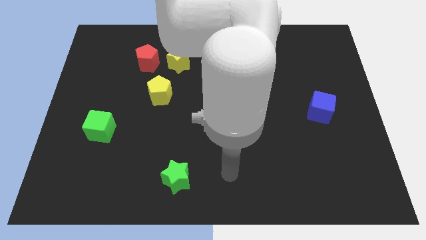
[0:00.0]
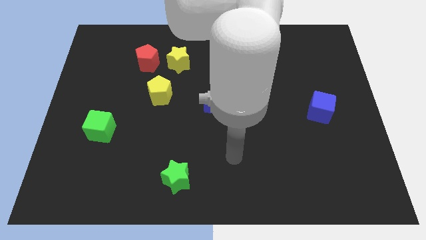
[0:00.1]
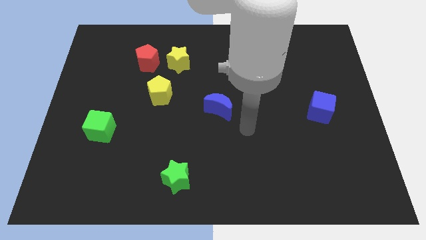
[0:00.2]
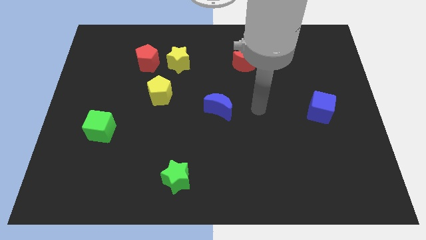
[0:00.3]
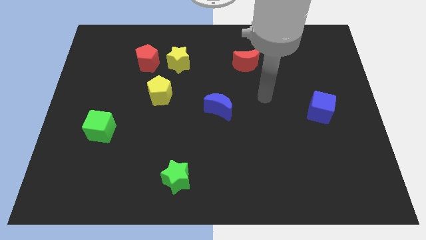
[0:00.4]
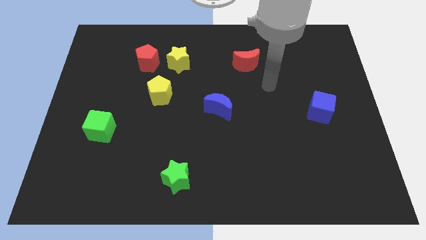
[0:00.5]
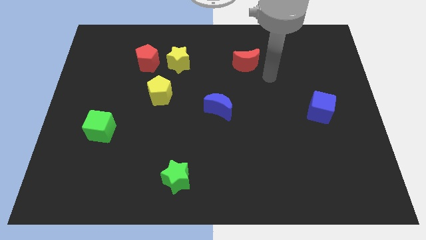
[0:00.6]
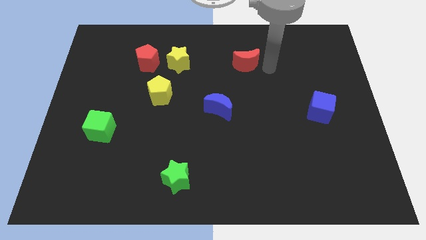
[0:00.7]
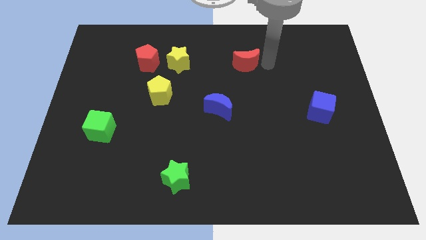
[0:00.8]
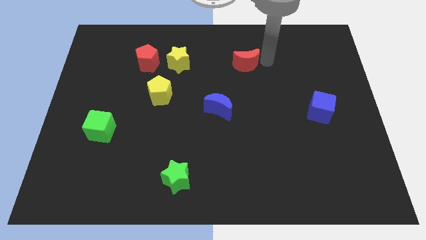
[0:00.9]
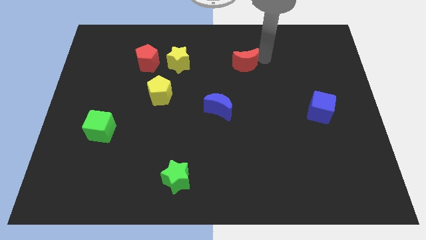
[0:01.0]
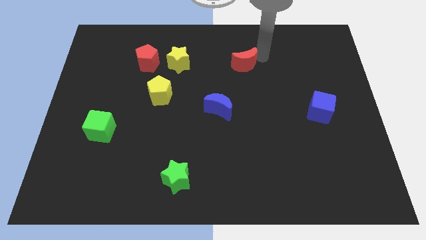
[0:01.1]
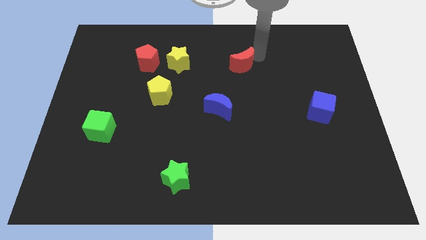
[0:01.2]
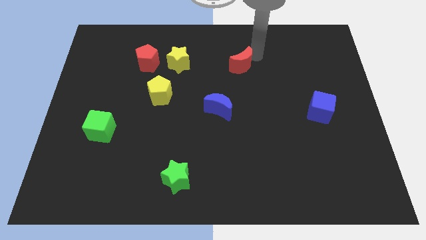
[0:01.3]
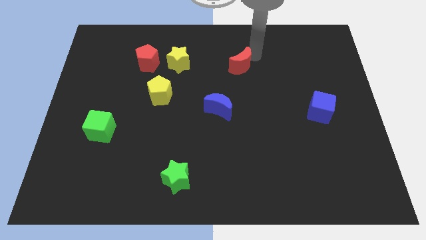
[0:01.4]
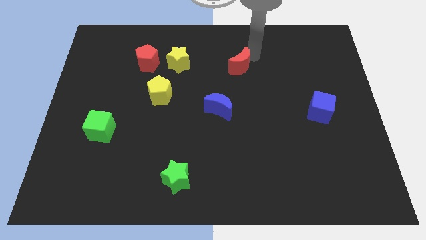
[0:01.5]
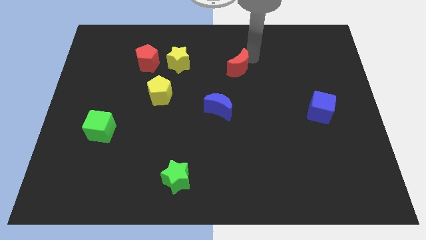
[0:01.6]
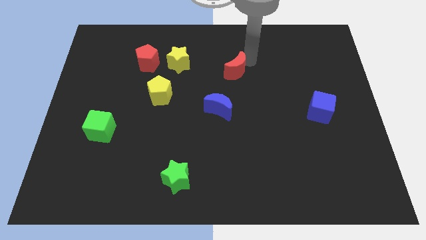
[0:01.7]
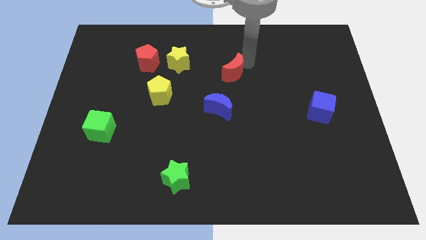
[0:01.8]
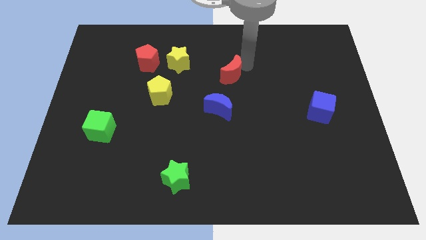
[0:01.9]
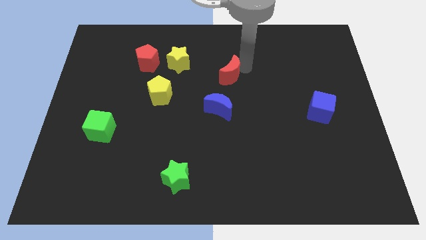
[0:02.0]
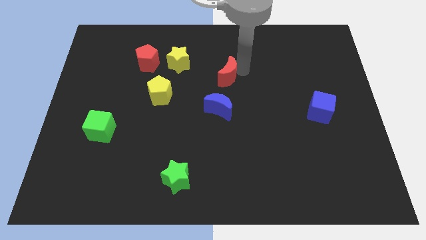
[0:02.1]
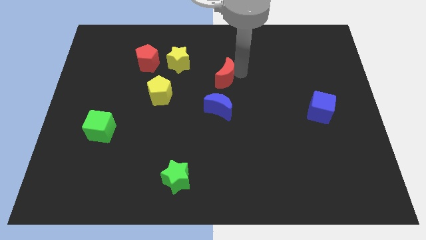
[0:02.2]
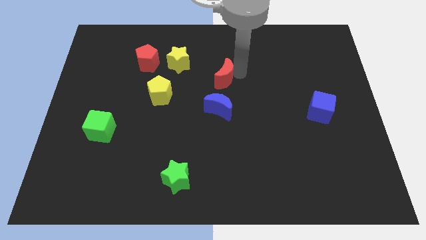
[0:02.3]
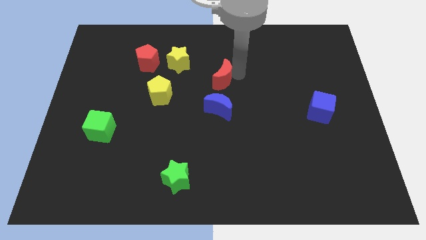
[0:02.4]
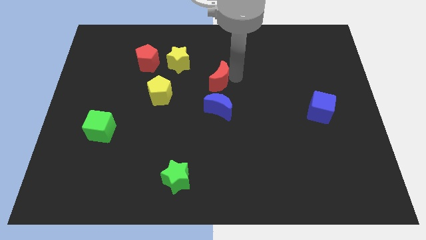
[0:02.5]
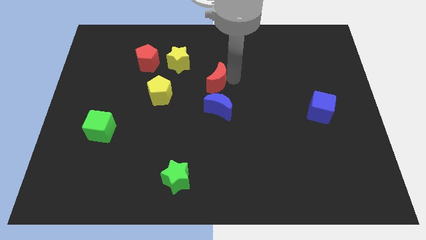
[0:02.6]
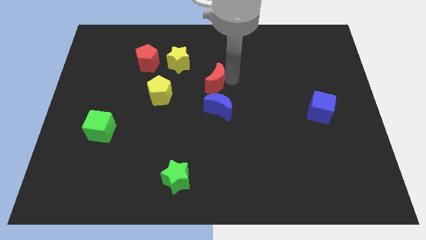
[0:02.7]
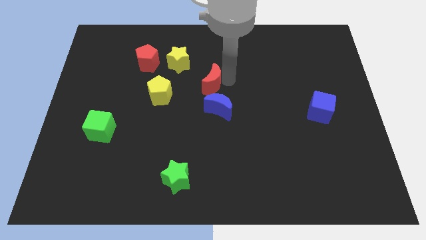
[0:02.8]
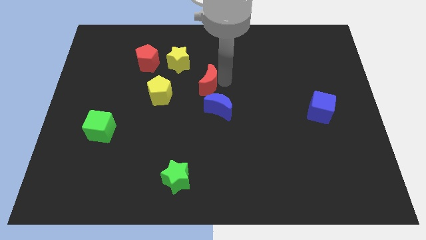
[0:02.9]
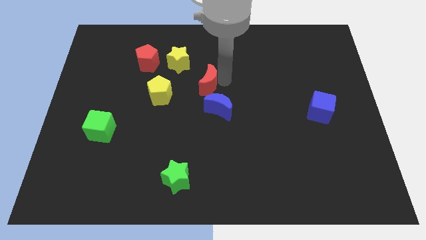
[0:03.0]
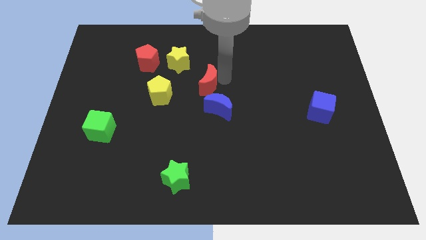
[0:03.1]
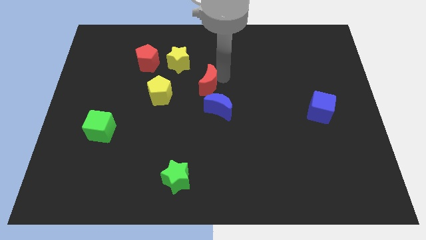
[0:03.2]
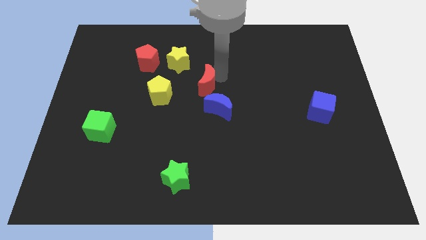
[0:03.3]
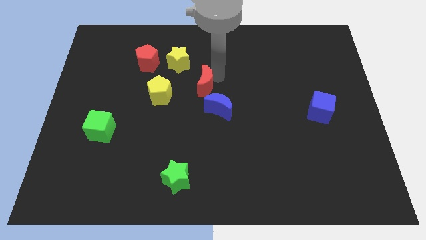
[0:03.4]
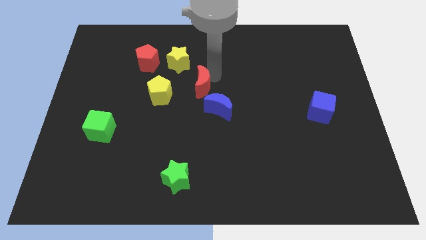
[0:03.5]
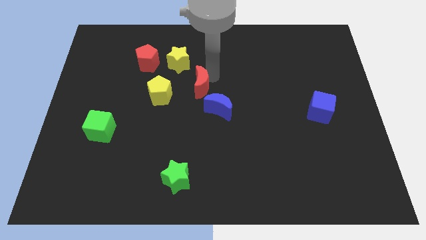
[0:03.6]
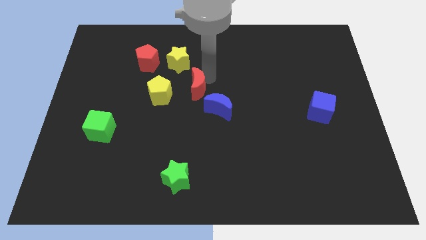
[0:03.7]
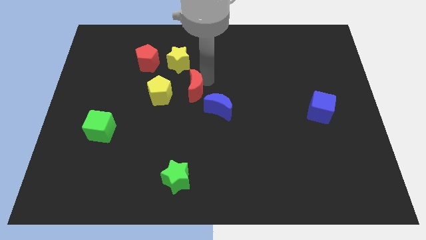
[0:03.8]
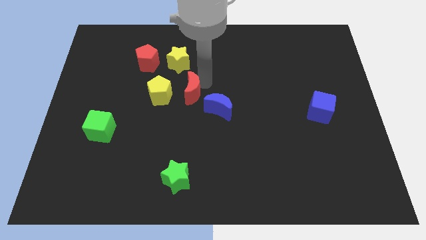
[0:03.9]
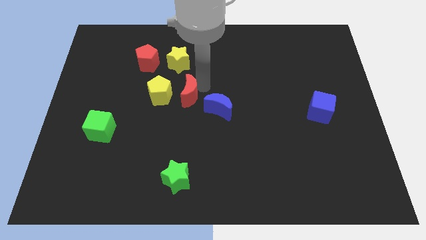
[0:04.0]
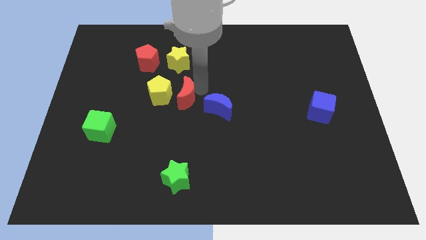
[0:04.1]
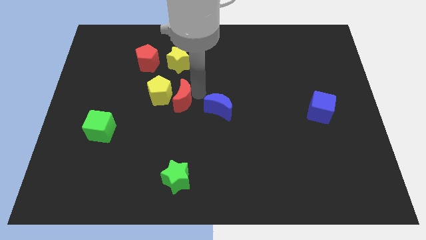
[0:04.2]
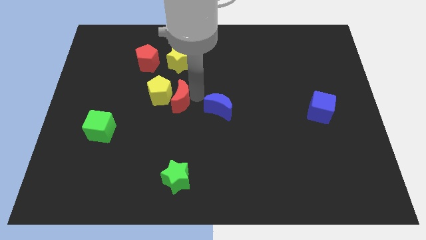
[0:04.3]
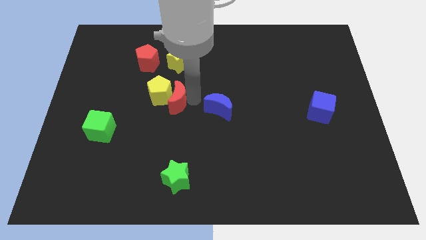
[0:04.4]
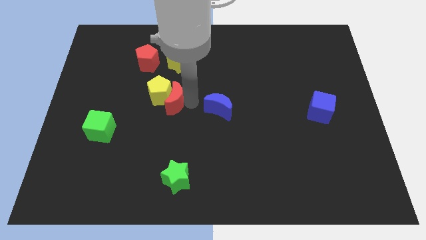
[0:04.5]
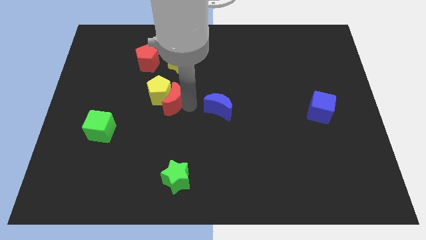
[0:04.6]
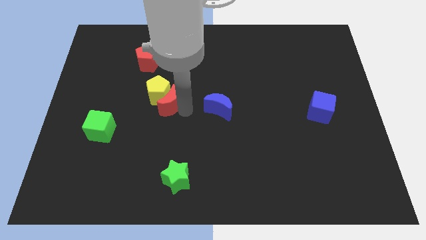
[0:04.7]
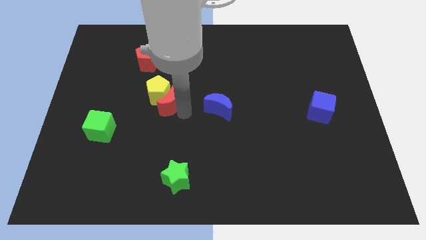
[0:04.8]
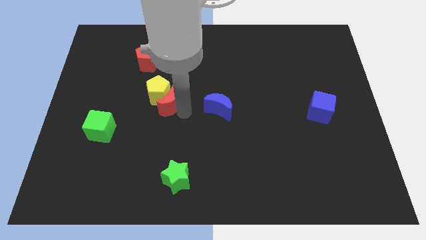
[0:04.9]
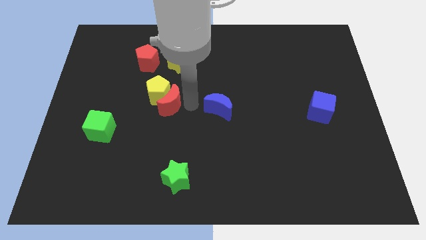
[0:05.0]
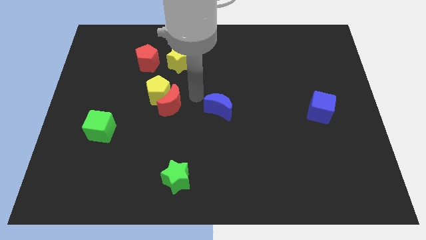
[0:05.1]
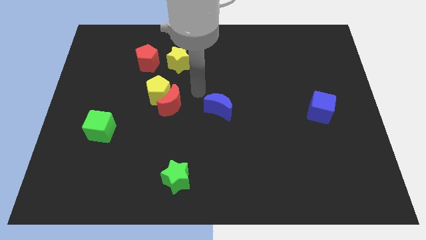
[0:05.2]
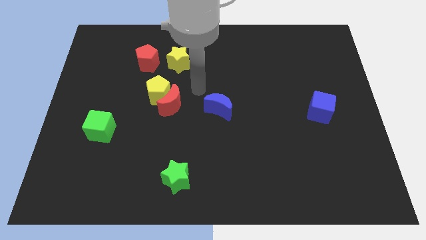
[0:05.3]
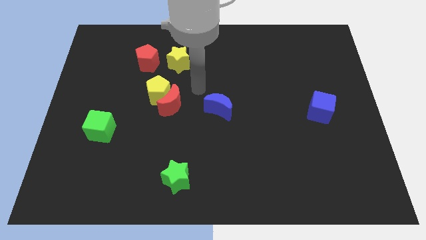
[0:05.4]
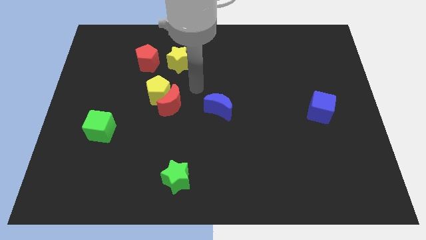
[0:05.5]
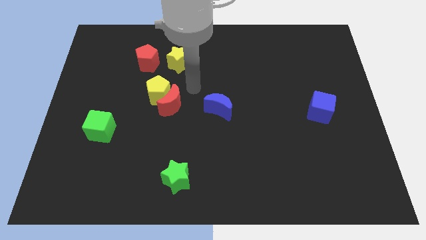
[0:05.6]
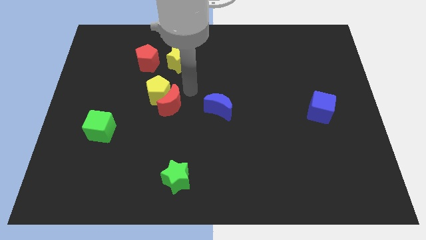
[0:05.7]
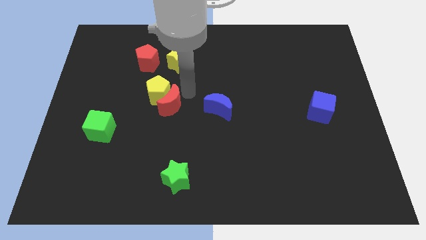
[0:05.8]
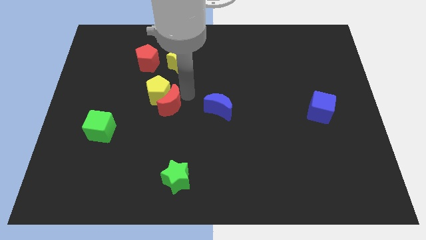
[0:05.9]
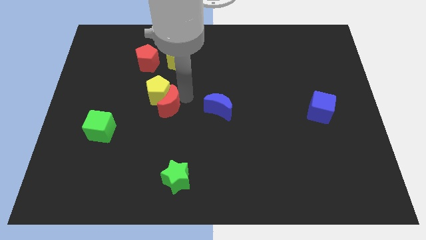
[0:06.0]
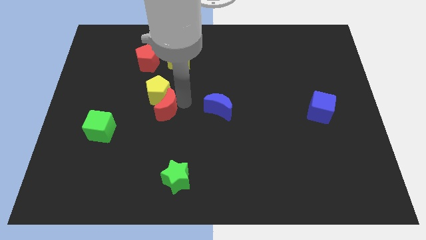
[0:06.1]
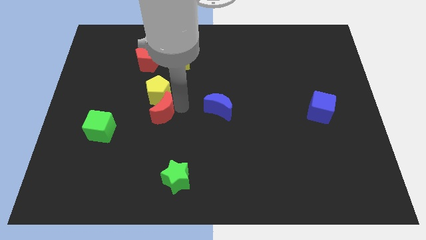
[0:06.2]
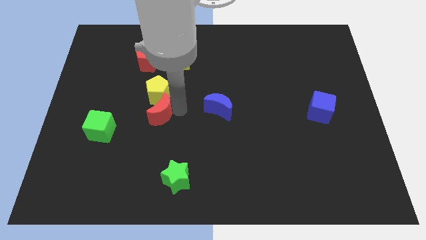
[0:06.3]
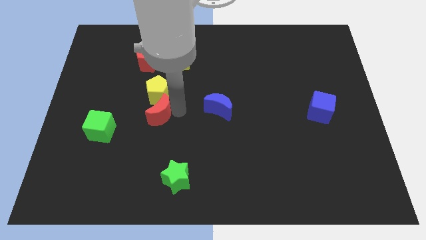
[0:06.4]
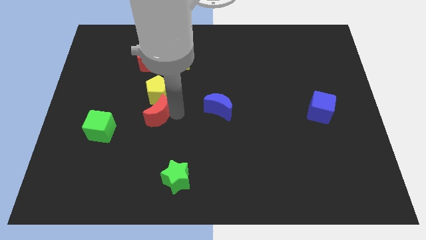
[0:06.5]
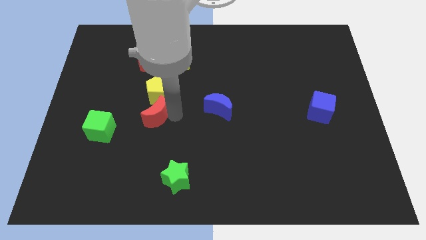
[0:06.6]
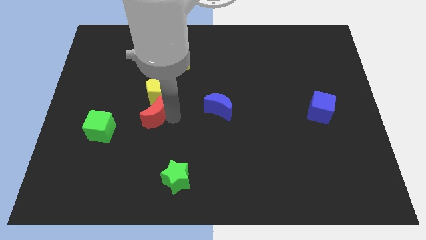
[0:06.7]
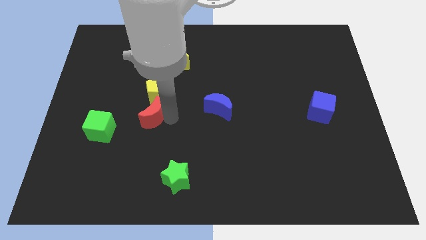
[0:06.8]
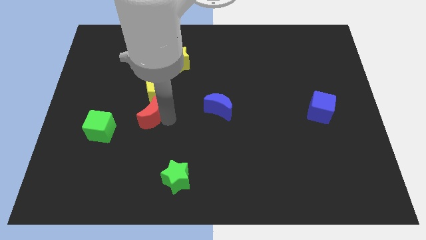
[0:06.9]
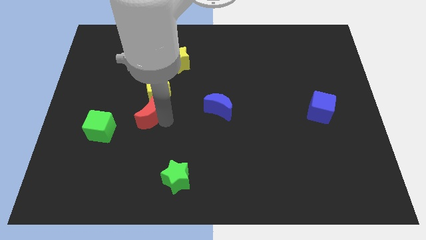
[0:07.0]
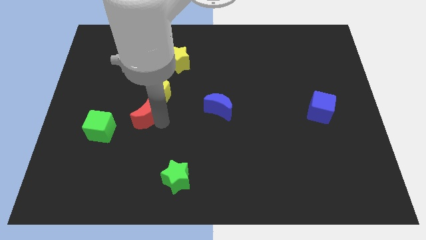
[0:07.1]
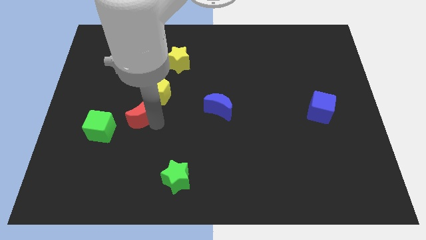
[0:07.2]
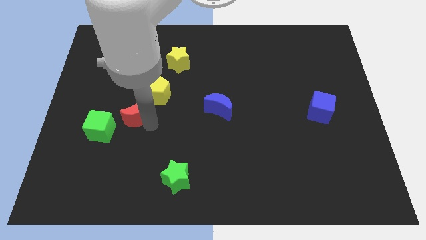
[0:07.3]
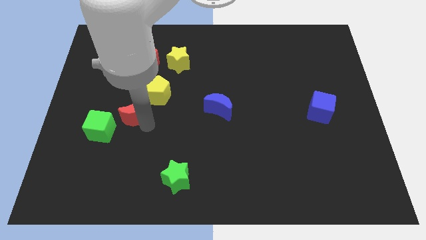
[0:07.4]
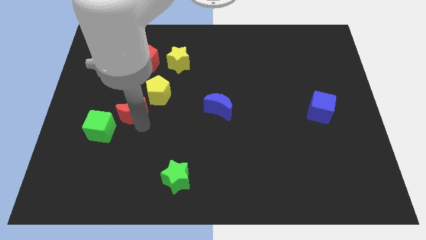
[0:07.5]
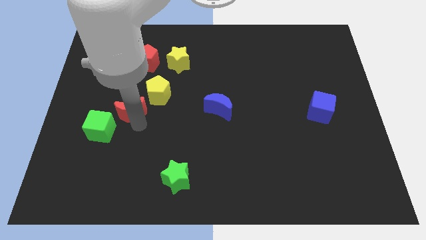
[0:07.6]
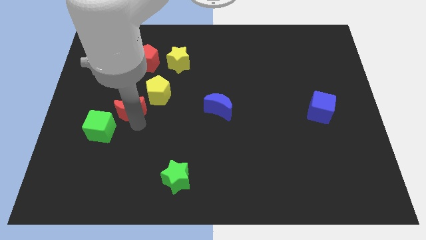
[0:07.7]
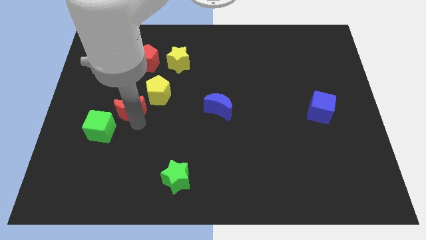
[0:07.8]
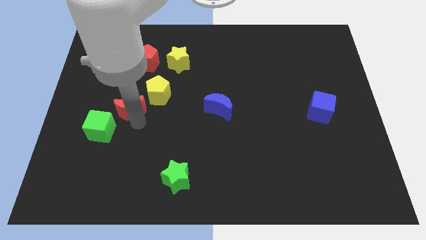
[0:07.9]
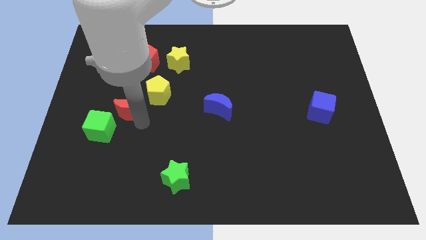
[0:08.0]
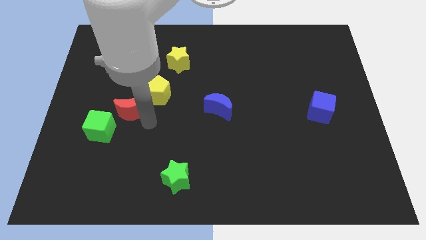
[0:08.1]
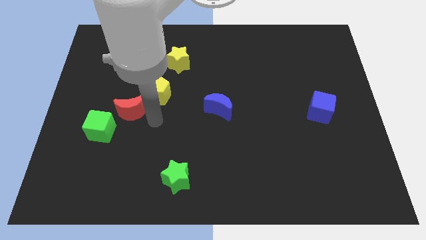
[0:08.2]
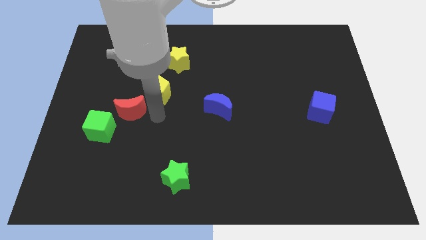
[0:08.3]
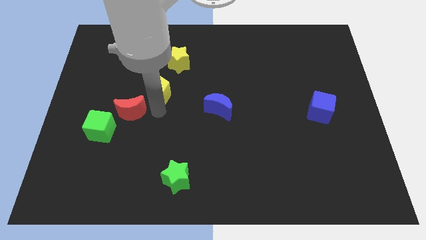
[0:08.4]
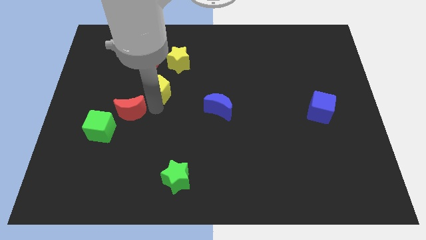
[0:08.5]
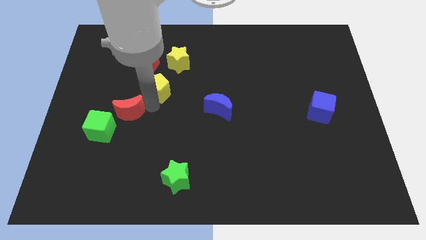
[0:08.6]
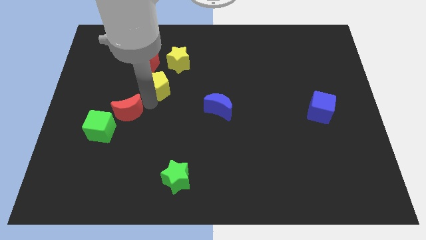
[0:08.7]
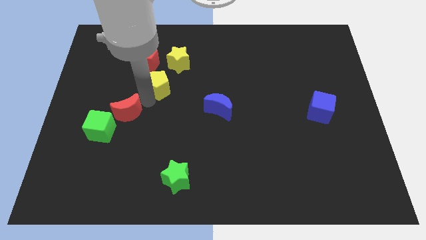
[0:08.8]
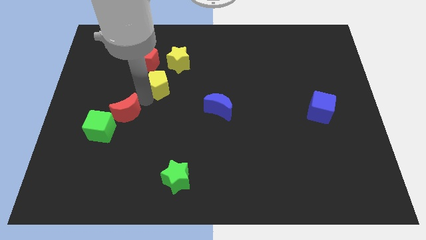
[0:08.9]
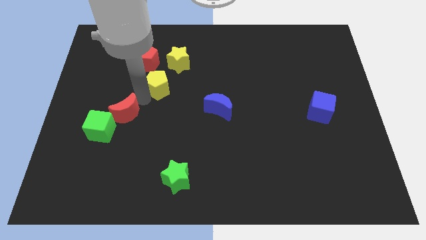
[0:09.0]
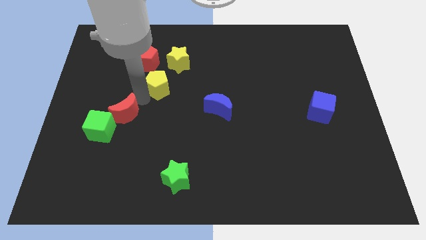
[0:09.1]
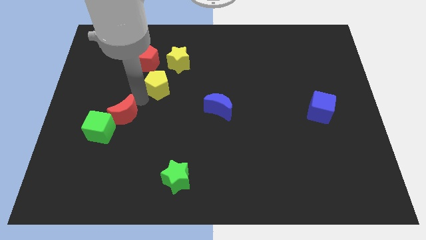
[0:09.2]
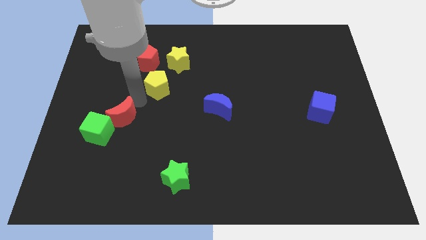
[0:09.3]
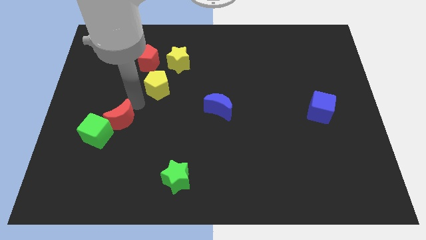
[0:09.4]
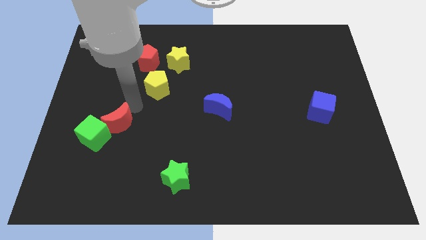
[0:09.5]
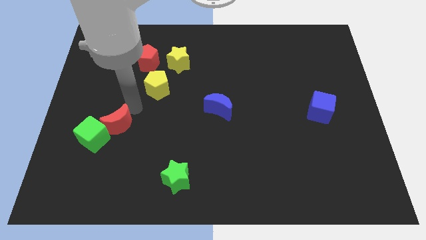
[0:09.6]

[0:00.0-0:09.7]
move the red moon next to the green cube
